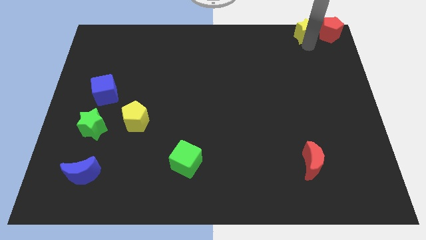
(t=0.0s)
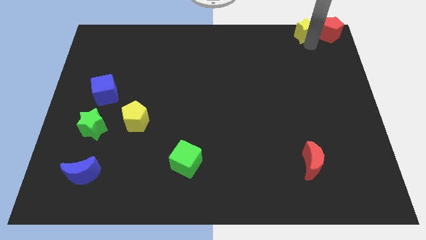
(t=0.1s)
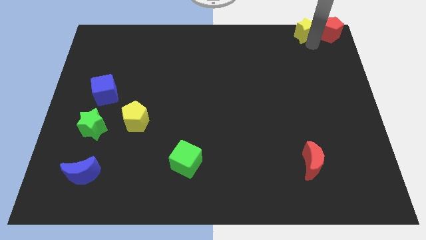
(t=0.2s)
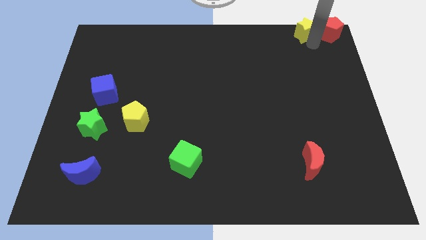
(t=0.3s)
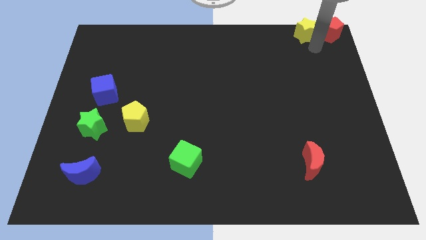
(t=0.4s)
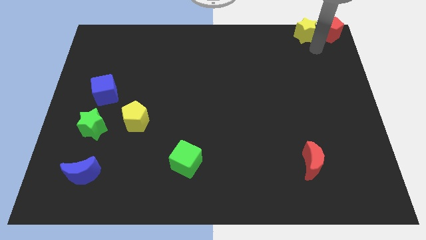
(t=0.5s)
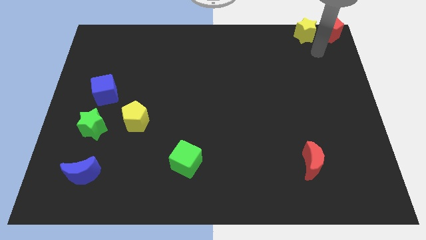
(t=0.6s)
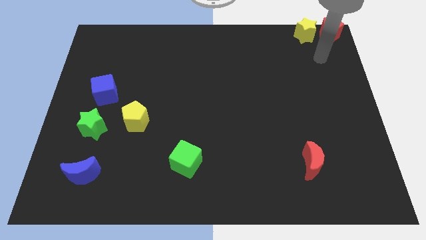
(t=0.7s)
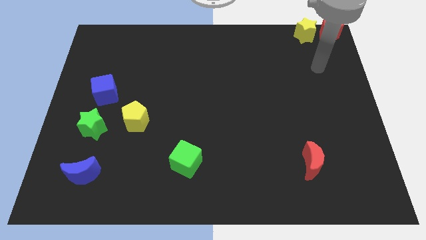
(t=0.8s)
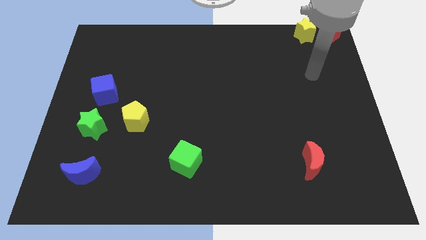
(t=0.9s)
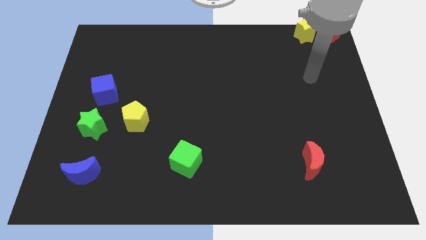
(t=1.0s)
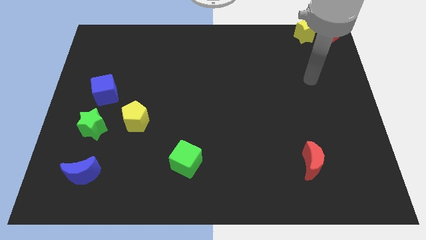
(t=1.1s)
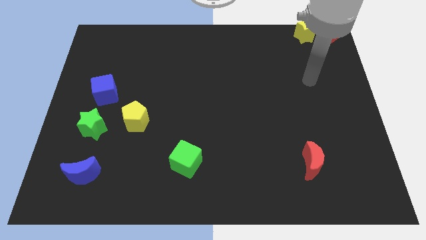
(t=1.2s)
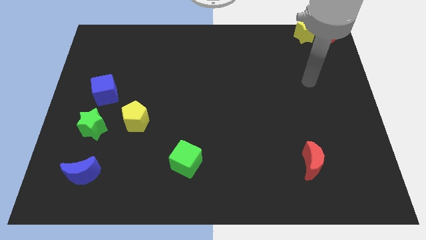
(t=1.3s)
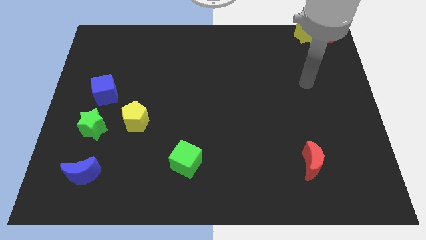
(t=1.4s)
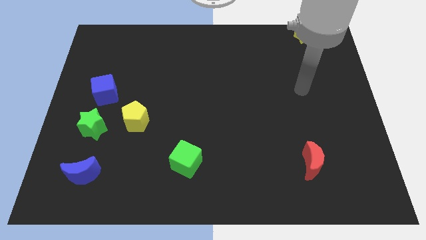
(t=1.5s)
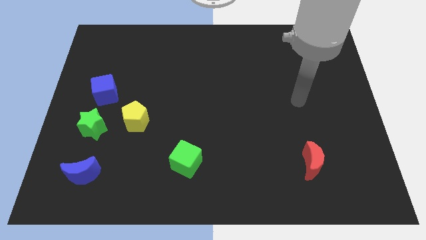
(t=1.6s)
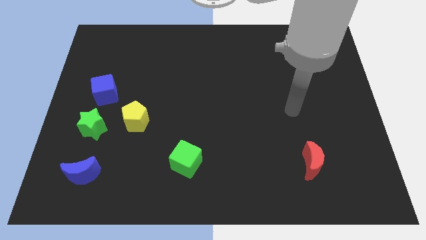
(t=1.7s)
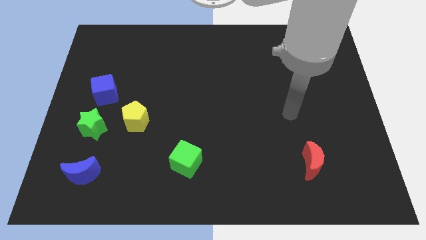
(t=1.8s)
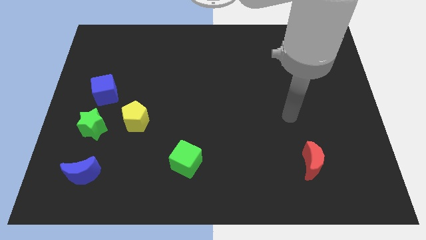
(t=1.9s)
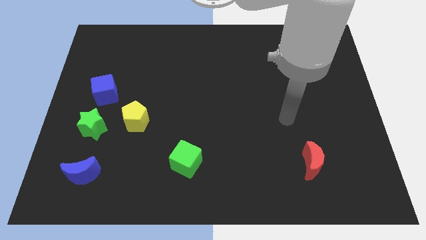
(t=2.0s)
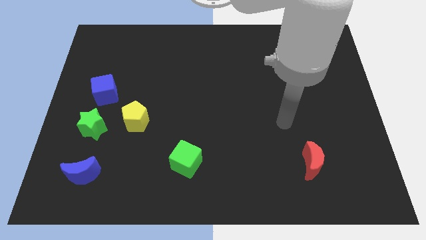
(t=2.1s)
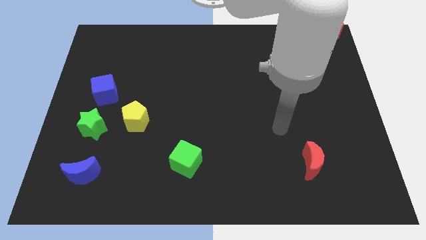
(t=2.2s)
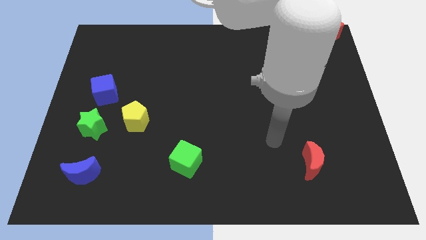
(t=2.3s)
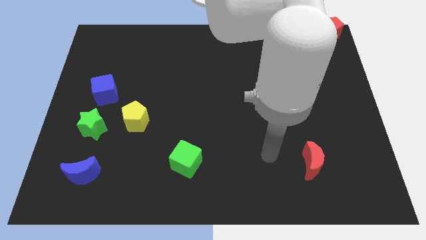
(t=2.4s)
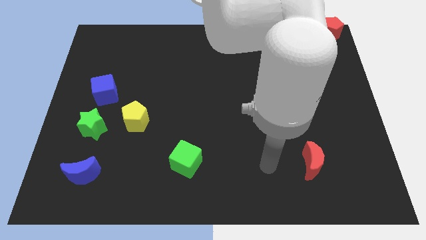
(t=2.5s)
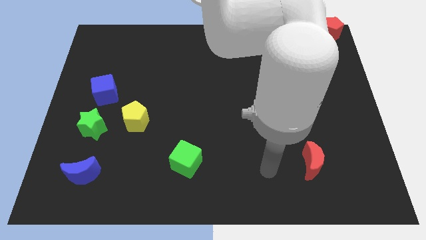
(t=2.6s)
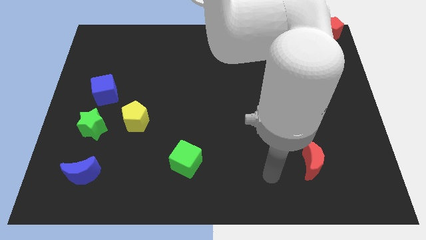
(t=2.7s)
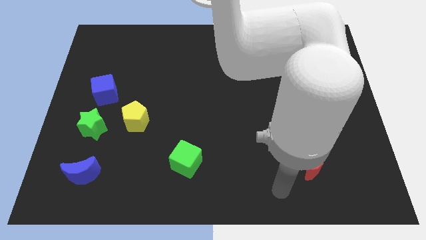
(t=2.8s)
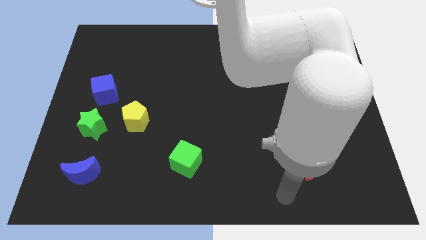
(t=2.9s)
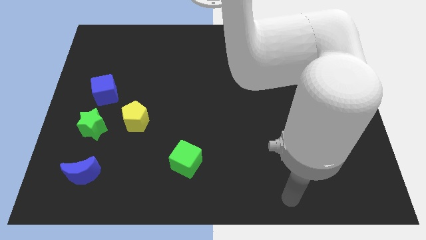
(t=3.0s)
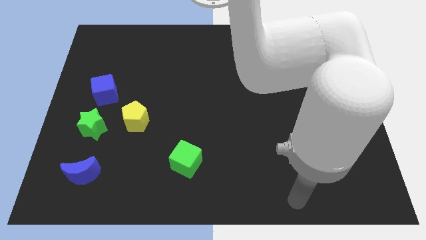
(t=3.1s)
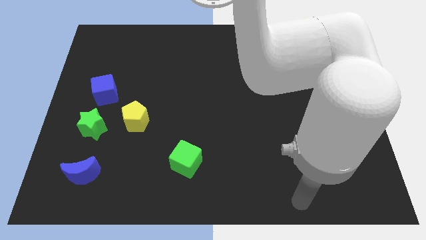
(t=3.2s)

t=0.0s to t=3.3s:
move the arm away from the yellow star

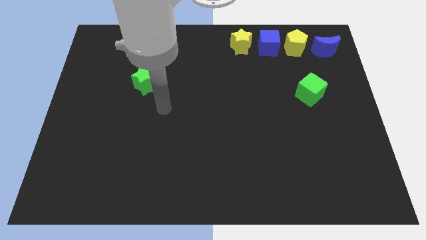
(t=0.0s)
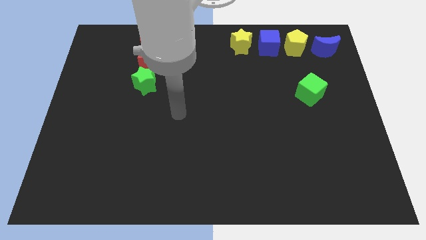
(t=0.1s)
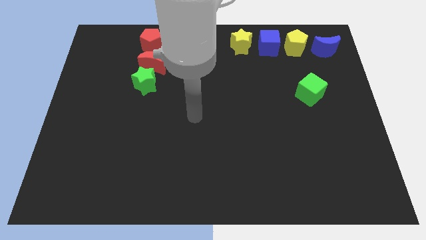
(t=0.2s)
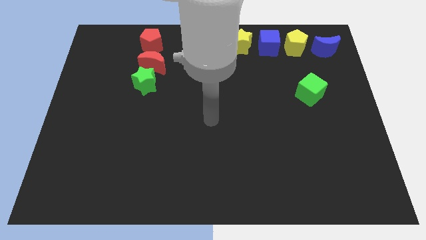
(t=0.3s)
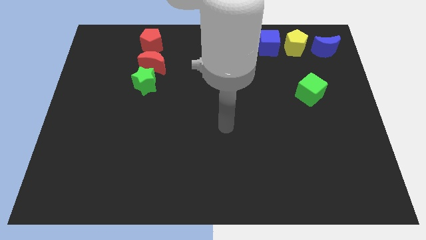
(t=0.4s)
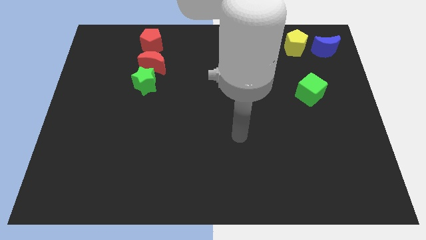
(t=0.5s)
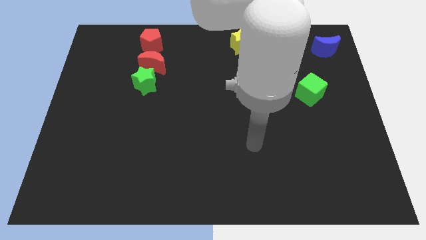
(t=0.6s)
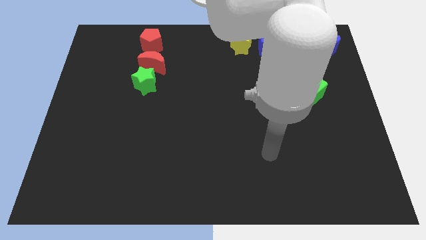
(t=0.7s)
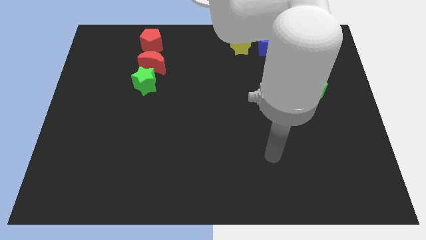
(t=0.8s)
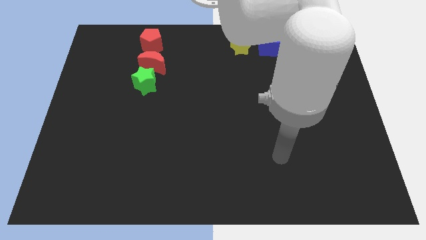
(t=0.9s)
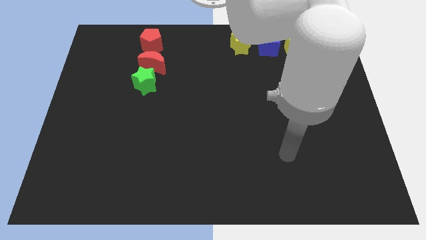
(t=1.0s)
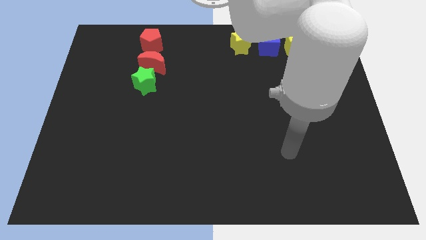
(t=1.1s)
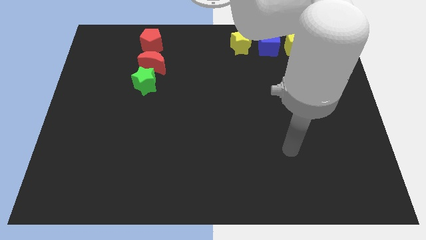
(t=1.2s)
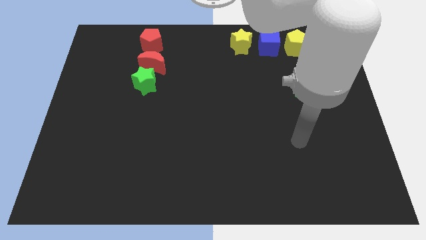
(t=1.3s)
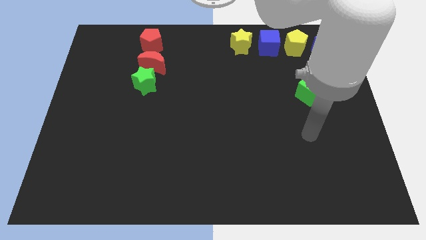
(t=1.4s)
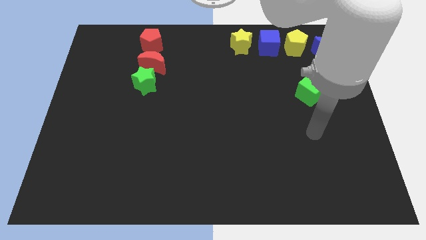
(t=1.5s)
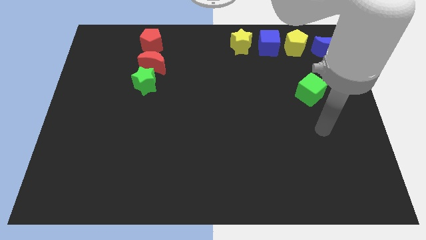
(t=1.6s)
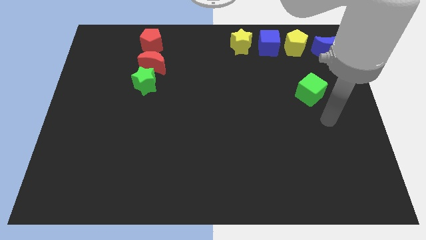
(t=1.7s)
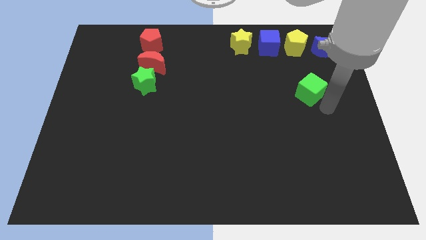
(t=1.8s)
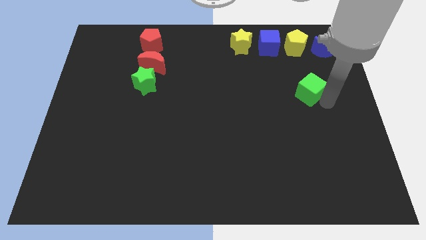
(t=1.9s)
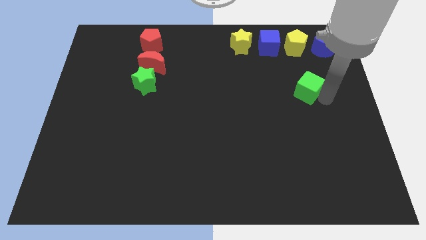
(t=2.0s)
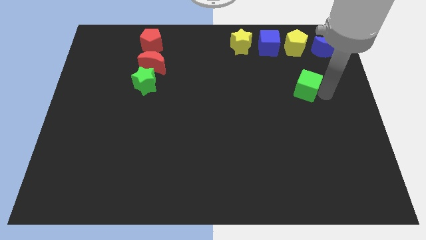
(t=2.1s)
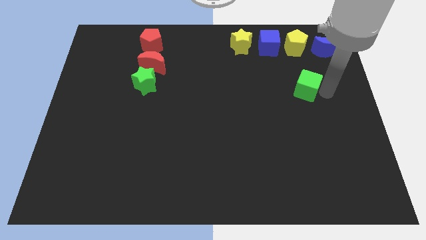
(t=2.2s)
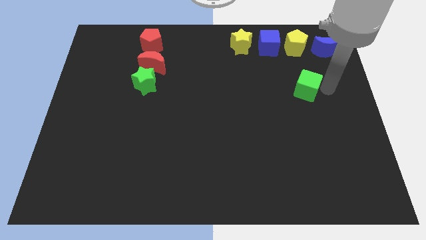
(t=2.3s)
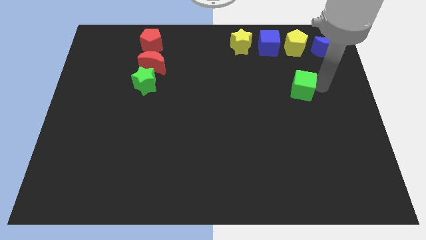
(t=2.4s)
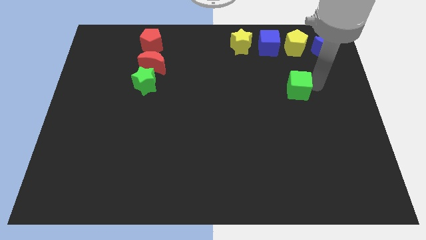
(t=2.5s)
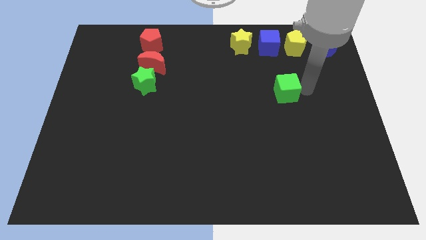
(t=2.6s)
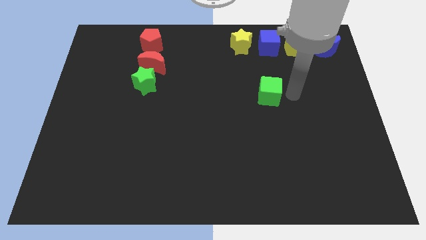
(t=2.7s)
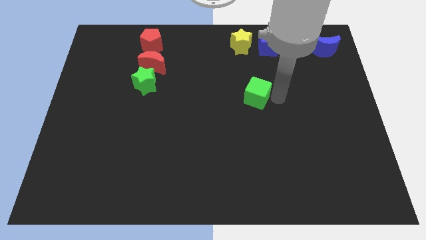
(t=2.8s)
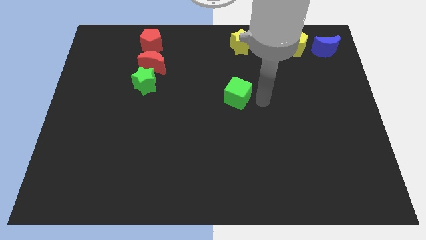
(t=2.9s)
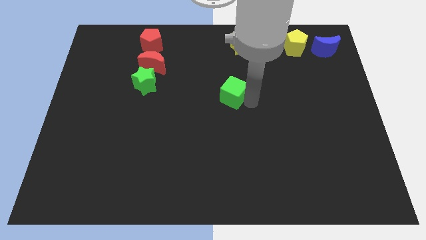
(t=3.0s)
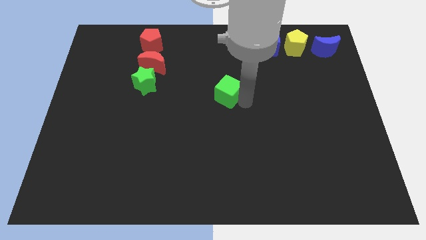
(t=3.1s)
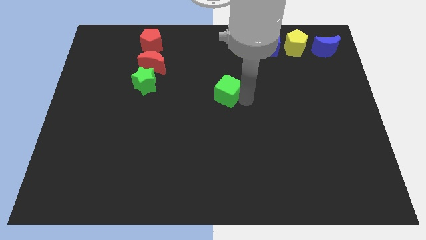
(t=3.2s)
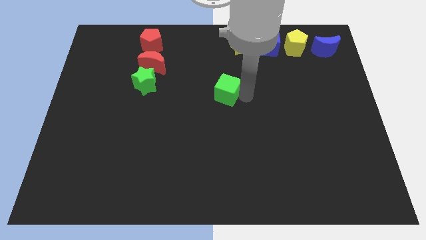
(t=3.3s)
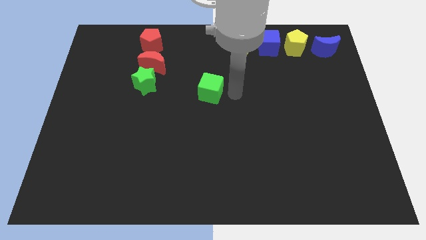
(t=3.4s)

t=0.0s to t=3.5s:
slide the green cube diagonally bottom left to the blue cube

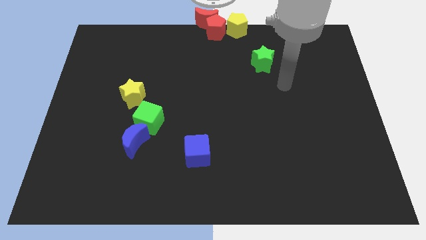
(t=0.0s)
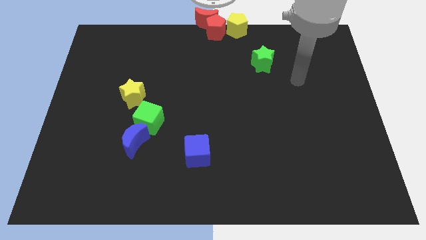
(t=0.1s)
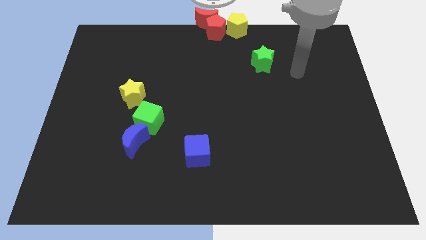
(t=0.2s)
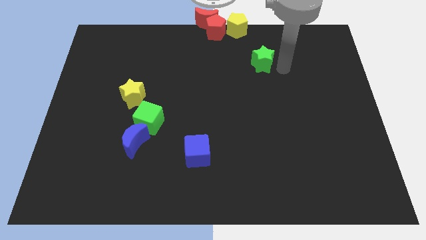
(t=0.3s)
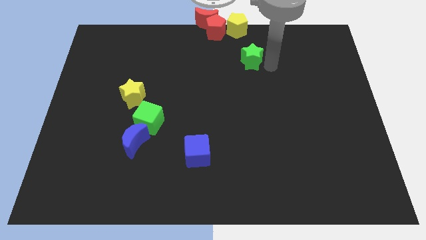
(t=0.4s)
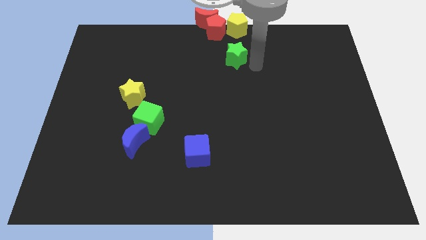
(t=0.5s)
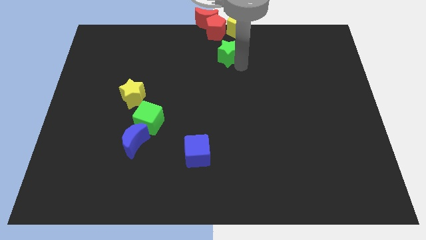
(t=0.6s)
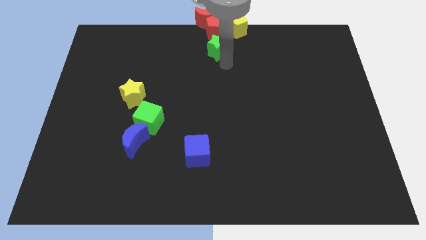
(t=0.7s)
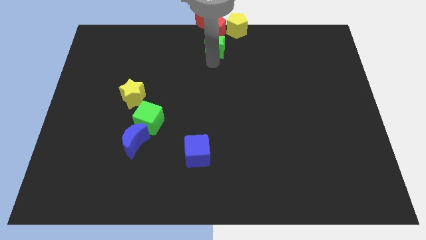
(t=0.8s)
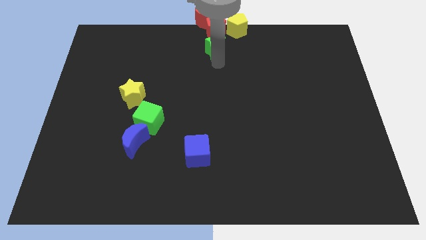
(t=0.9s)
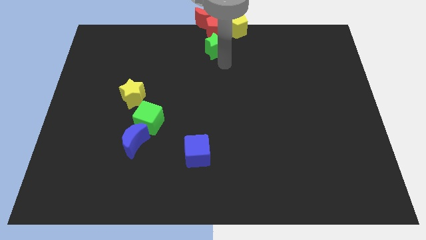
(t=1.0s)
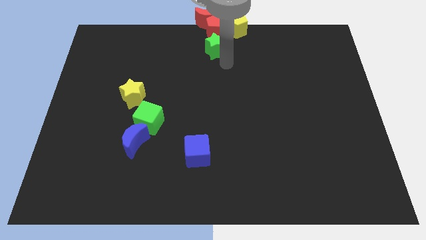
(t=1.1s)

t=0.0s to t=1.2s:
move green star below the red pentagon

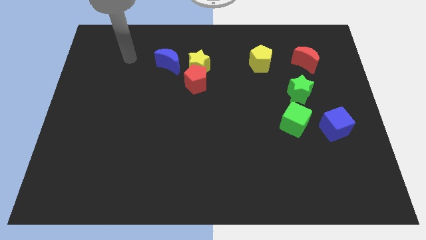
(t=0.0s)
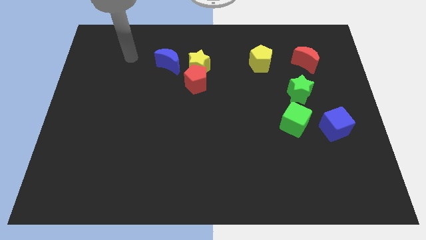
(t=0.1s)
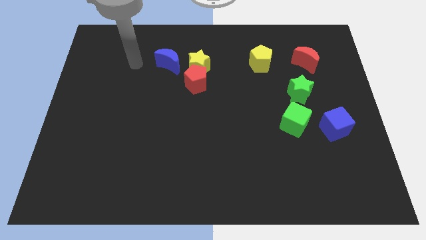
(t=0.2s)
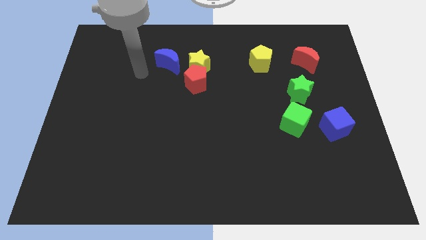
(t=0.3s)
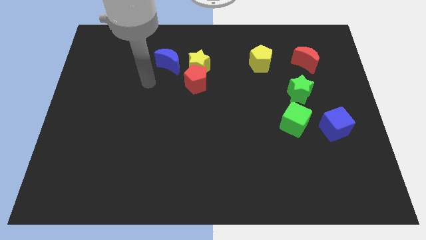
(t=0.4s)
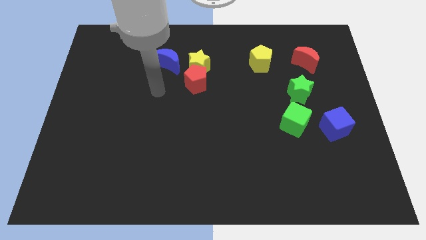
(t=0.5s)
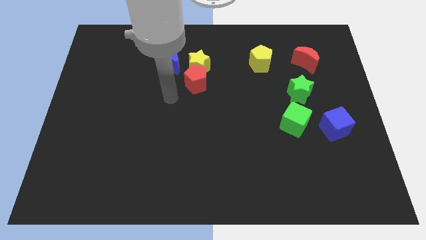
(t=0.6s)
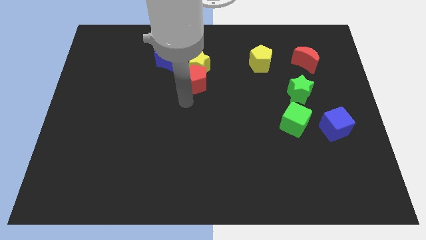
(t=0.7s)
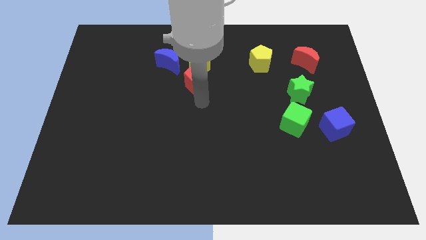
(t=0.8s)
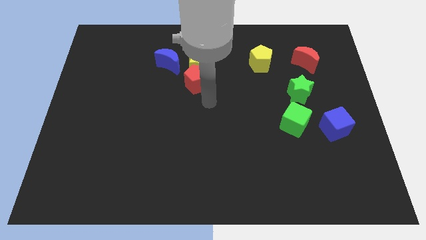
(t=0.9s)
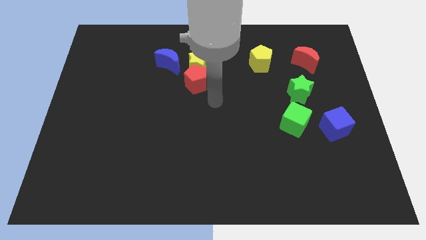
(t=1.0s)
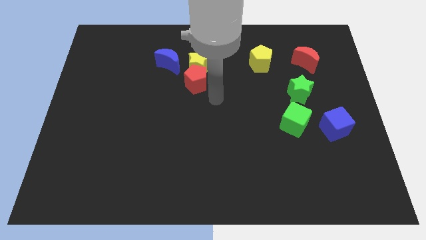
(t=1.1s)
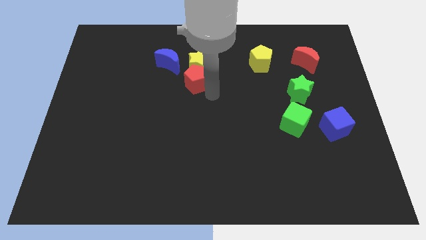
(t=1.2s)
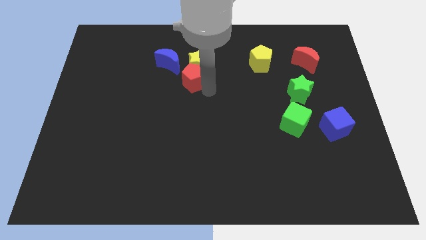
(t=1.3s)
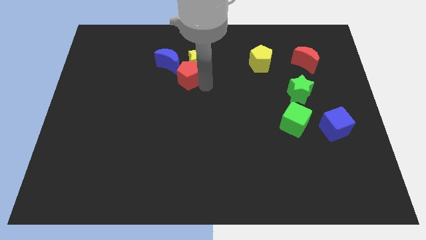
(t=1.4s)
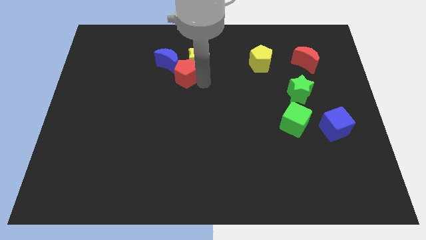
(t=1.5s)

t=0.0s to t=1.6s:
push the red pentagon towards the blue moon
